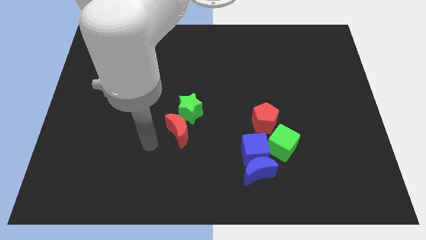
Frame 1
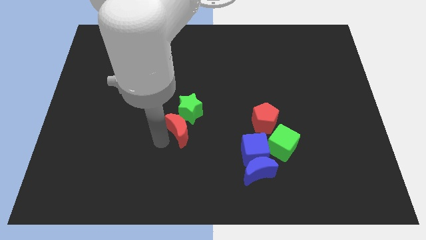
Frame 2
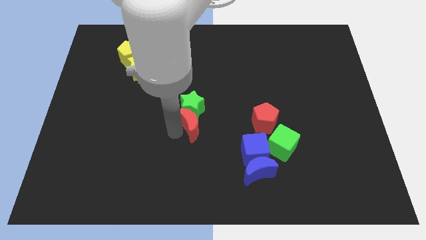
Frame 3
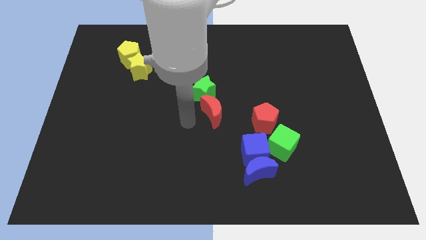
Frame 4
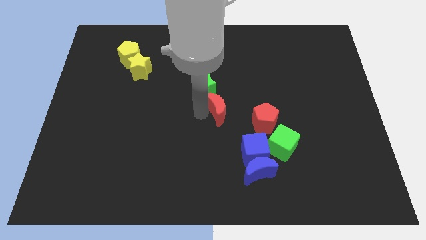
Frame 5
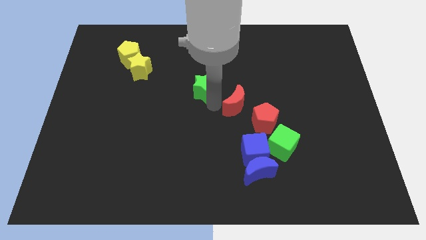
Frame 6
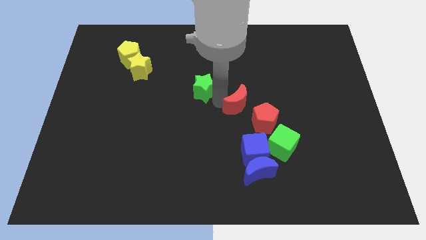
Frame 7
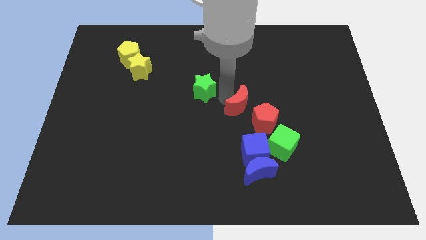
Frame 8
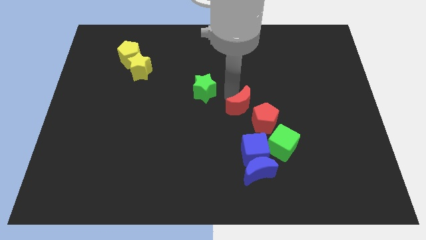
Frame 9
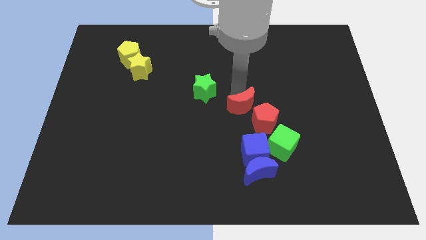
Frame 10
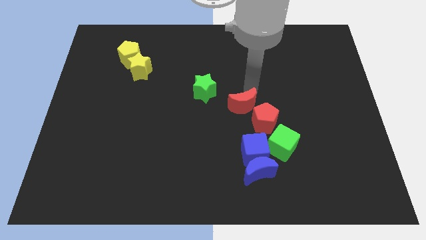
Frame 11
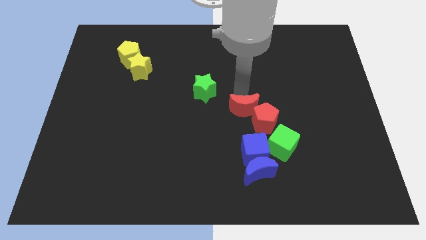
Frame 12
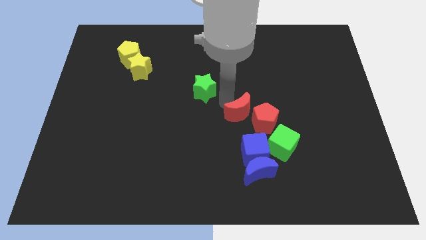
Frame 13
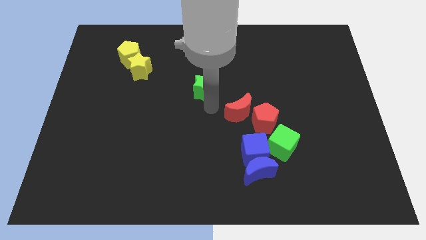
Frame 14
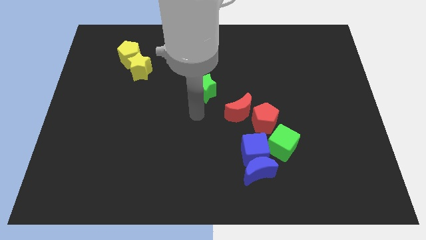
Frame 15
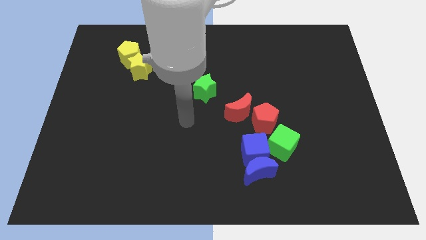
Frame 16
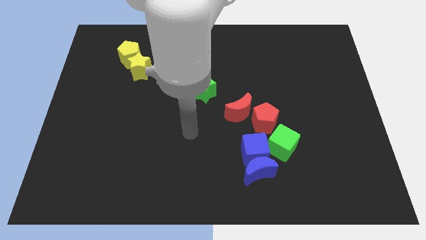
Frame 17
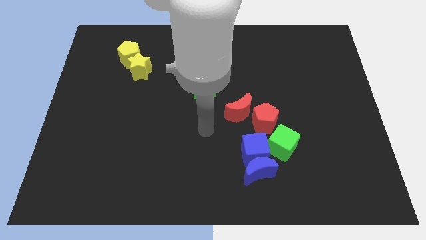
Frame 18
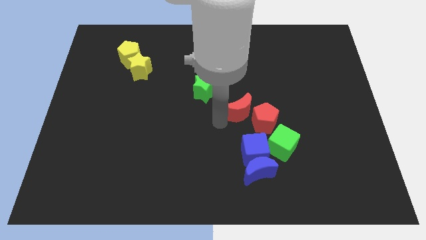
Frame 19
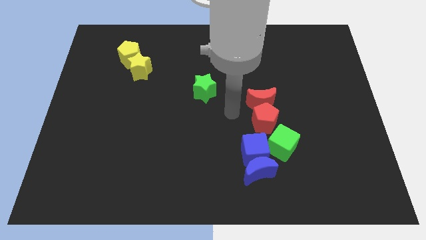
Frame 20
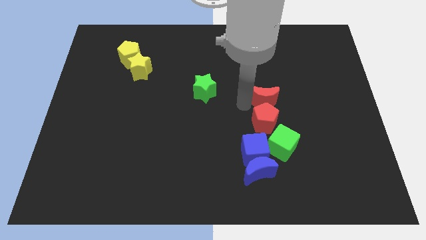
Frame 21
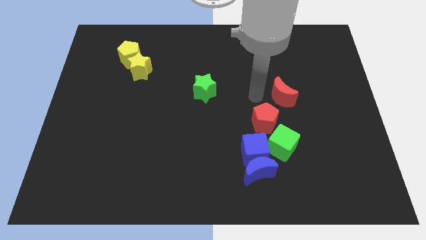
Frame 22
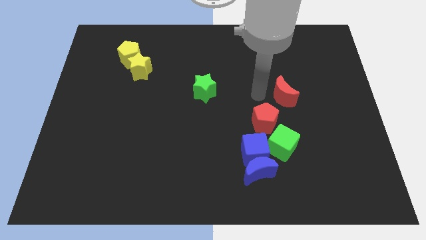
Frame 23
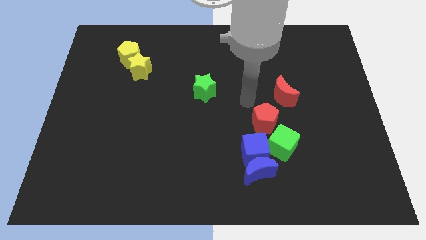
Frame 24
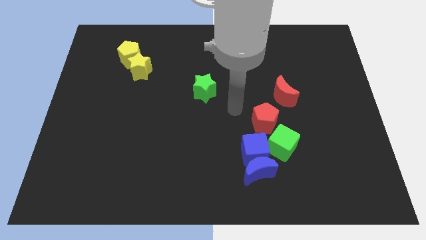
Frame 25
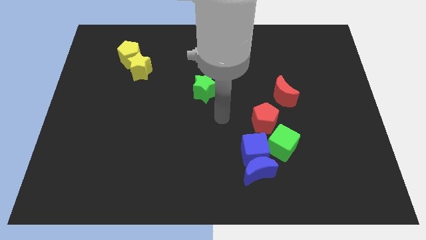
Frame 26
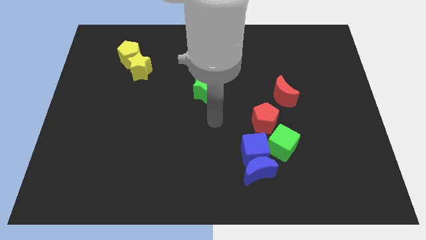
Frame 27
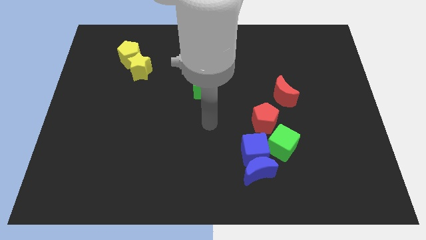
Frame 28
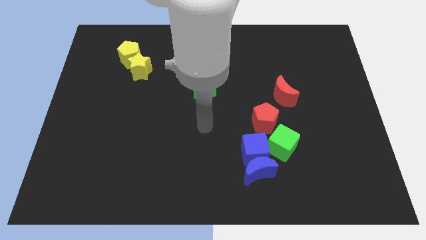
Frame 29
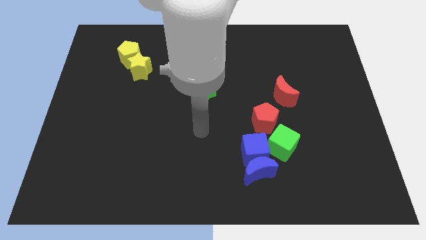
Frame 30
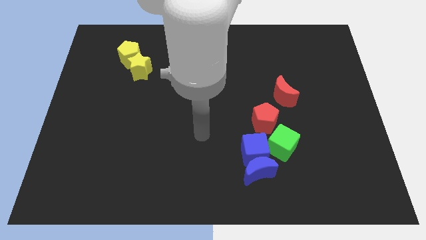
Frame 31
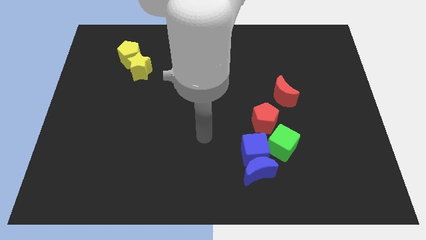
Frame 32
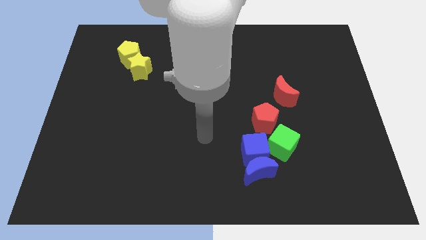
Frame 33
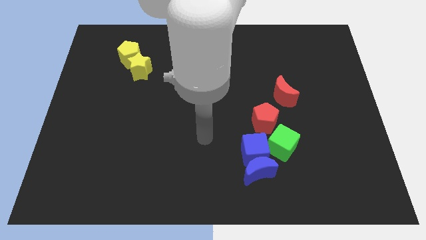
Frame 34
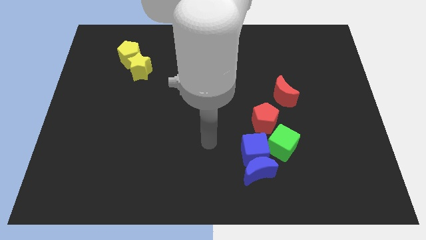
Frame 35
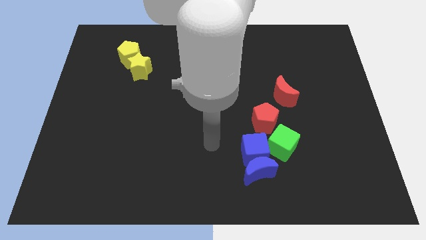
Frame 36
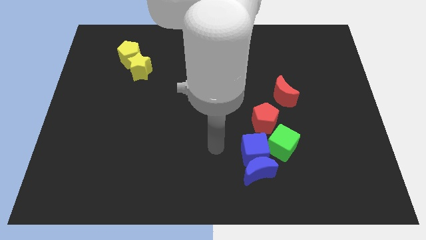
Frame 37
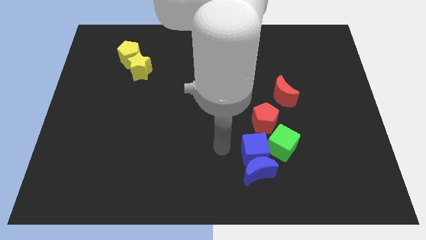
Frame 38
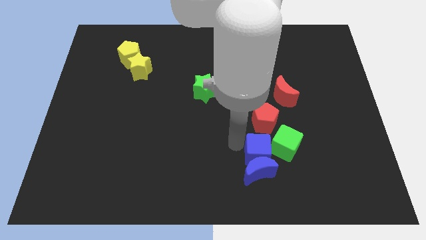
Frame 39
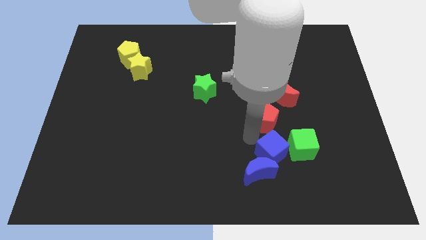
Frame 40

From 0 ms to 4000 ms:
push the red crescent towards the top right

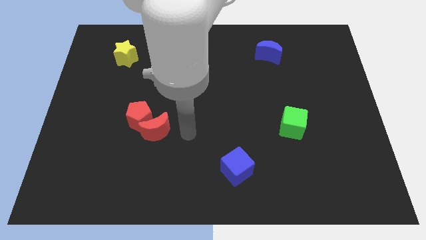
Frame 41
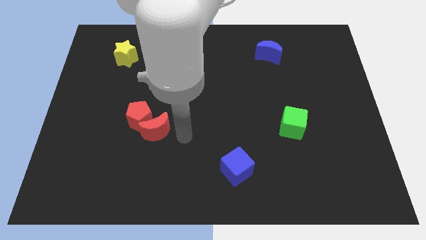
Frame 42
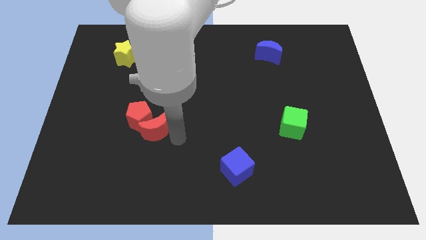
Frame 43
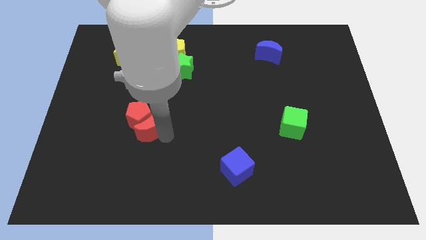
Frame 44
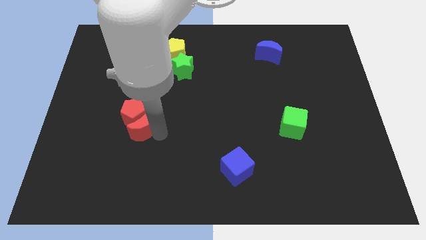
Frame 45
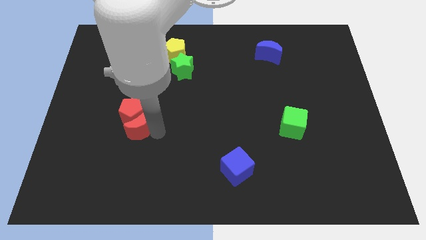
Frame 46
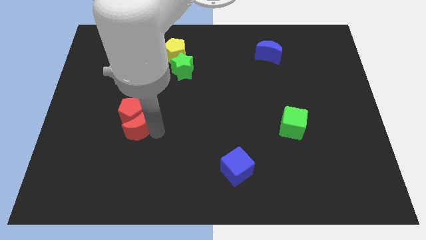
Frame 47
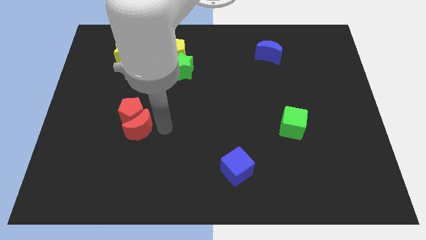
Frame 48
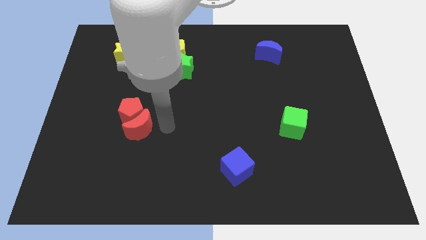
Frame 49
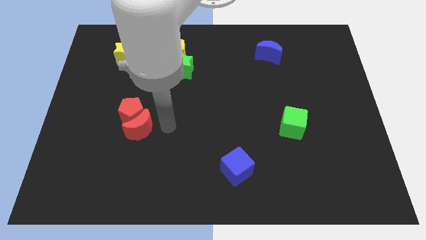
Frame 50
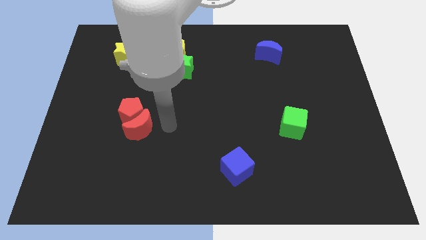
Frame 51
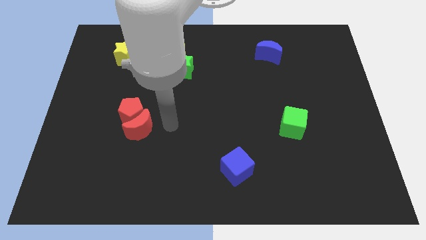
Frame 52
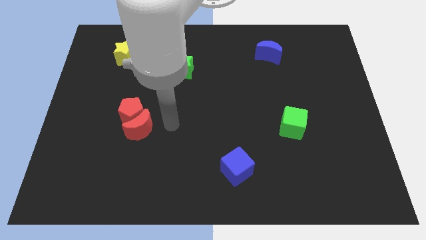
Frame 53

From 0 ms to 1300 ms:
slightly move the group of red blocks to the left

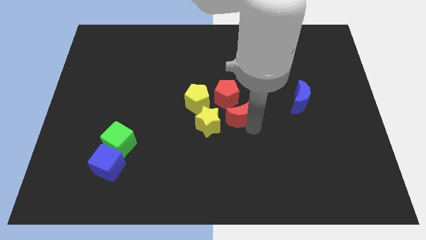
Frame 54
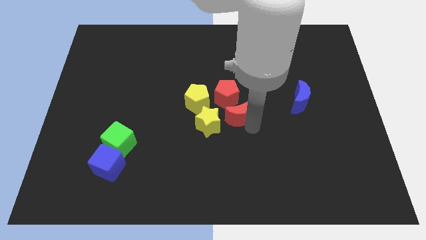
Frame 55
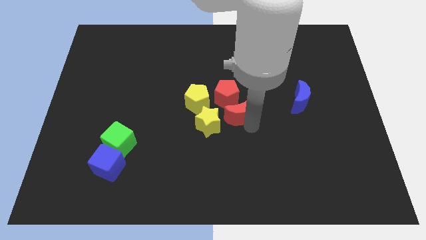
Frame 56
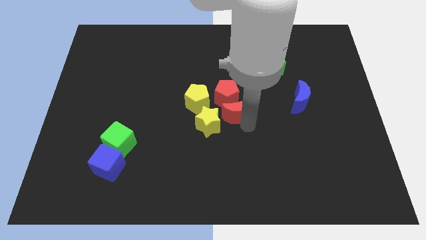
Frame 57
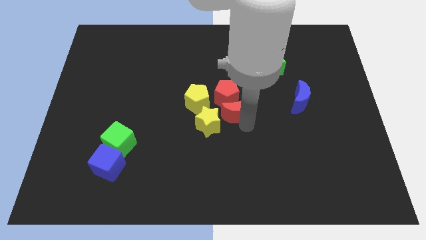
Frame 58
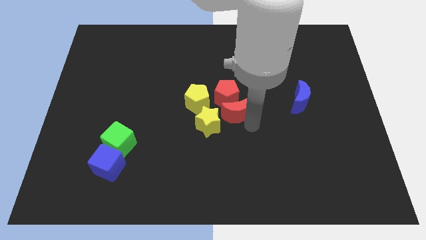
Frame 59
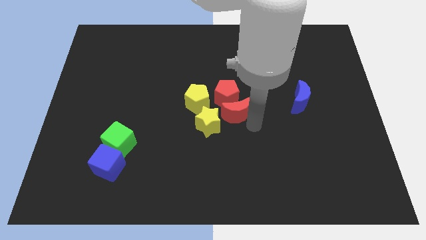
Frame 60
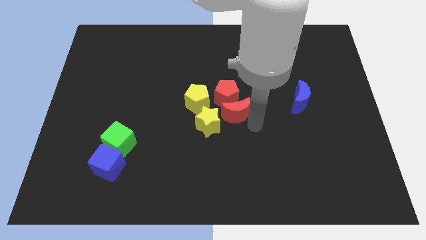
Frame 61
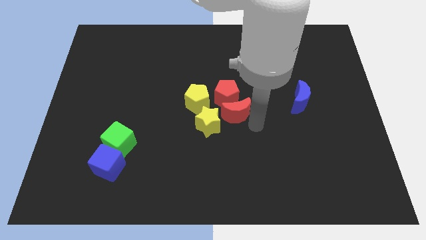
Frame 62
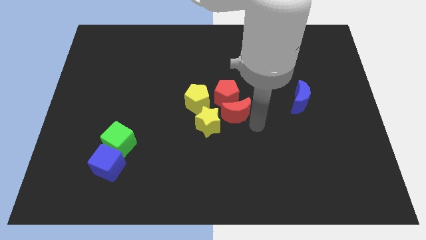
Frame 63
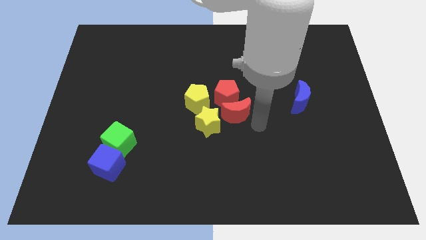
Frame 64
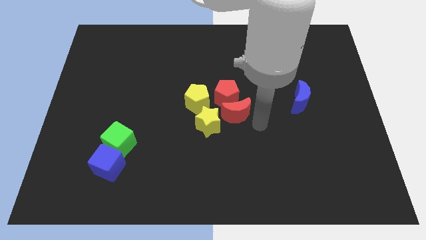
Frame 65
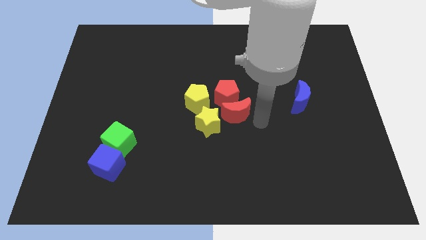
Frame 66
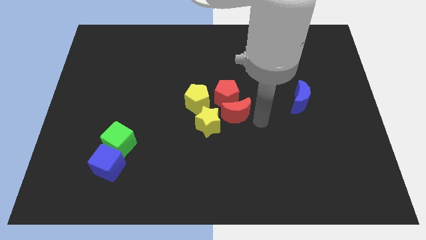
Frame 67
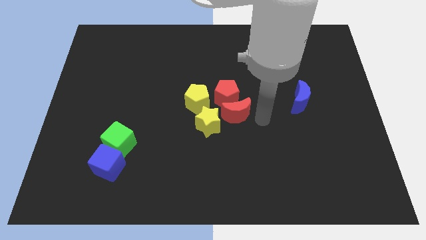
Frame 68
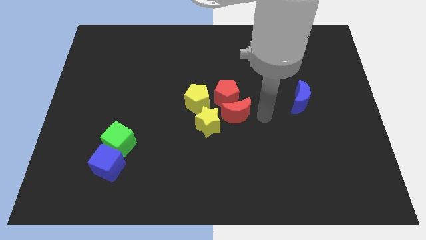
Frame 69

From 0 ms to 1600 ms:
place red moon to the bottom of red pentagon

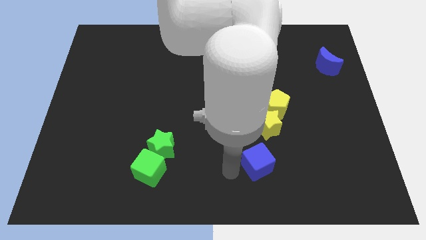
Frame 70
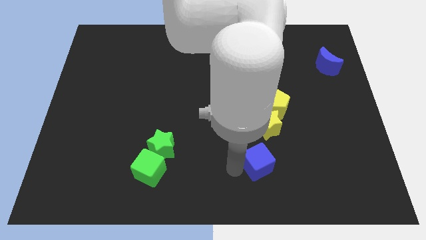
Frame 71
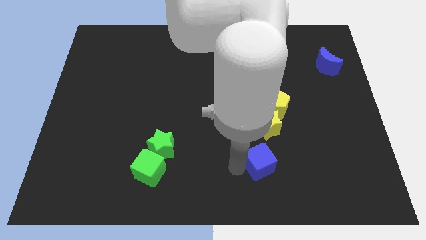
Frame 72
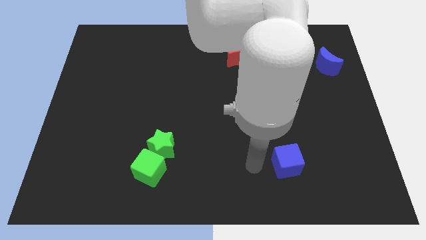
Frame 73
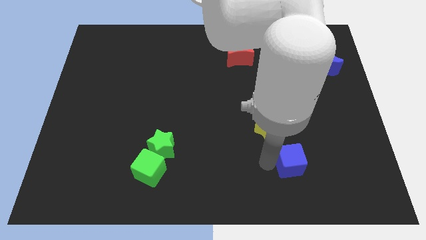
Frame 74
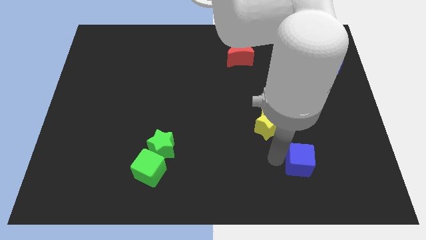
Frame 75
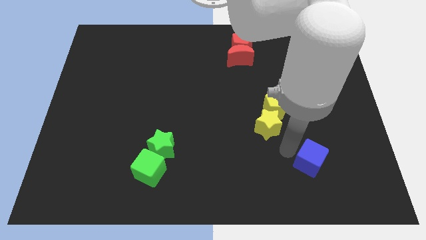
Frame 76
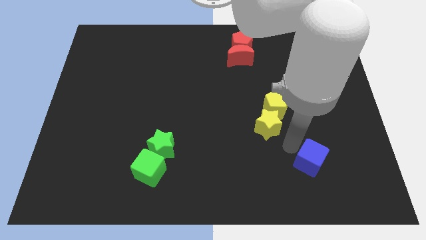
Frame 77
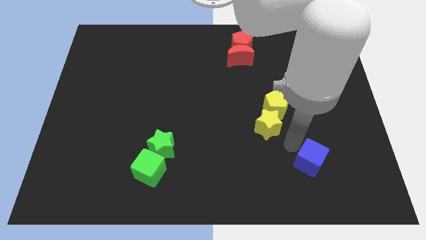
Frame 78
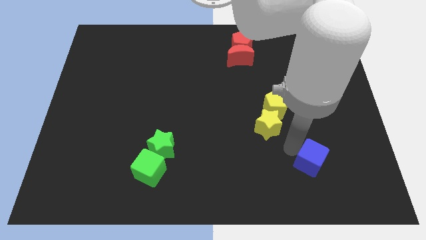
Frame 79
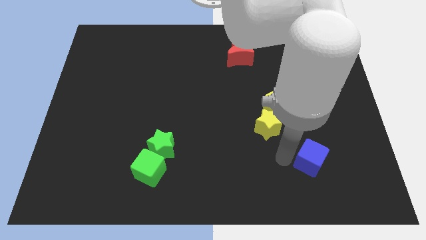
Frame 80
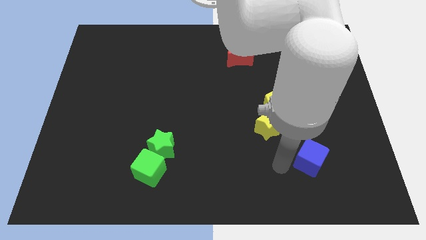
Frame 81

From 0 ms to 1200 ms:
push the blue cube towards the right

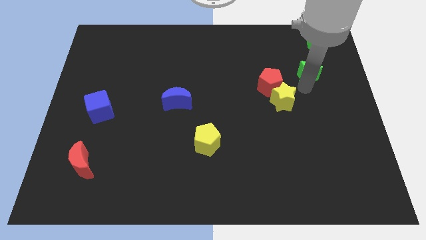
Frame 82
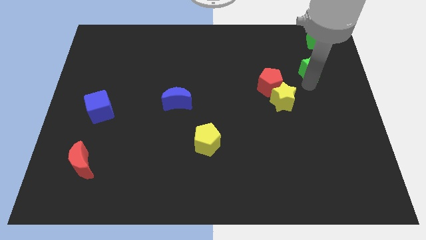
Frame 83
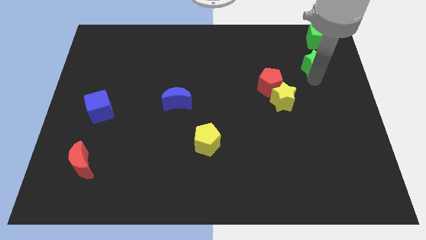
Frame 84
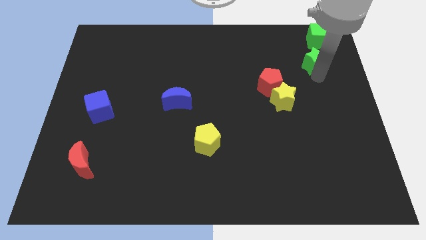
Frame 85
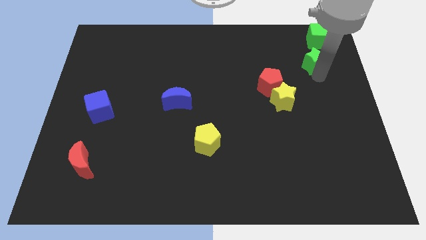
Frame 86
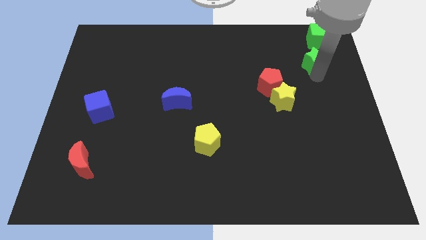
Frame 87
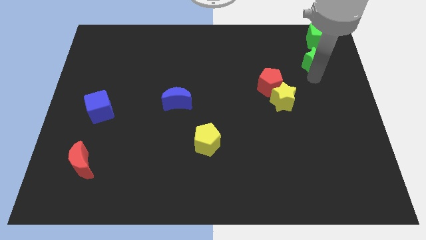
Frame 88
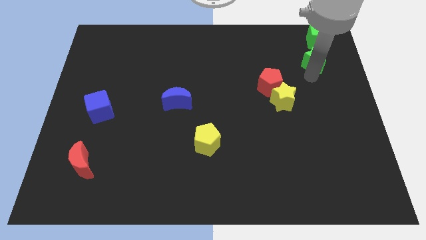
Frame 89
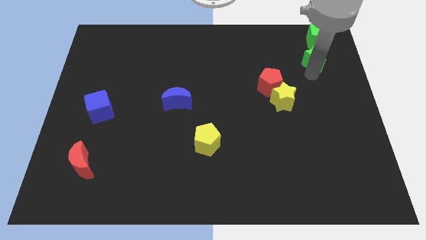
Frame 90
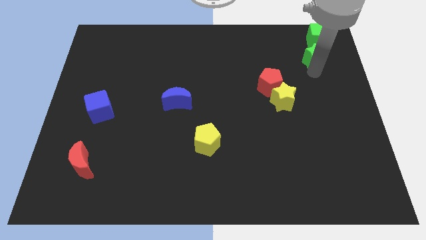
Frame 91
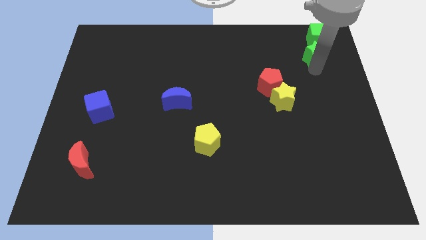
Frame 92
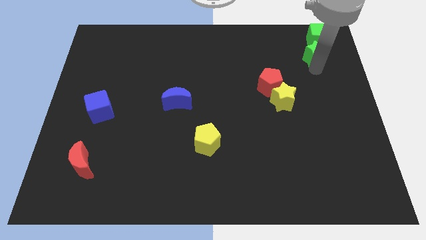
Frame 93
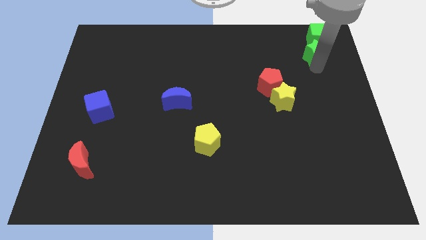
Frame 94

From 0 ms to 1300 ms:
push the green star towards the green cube
